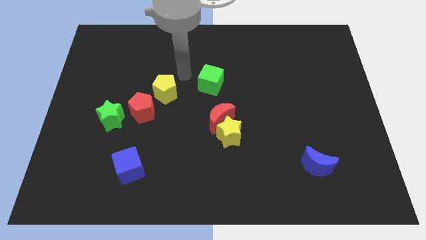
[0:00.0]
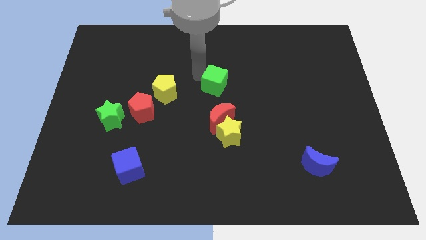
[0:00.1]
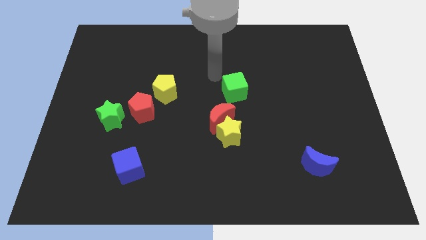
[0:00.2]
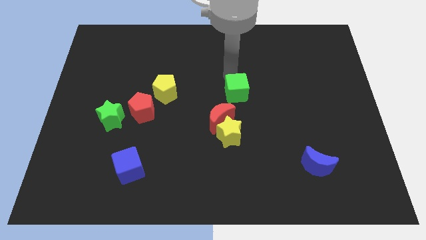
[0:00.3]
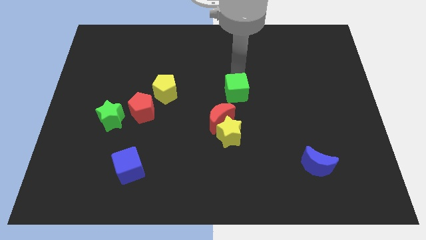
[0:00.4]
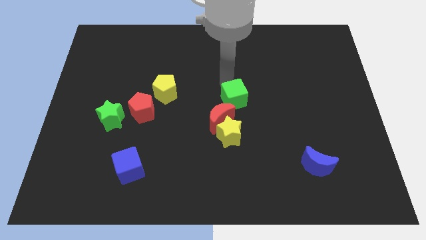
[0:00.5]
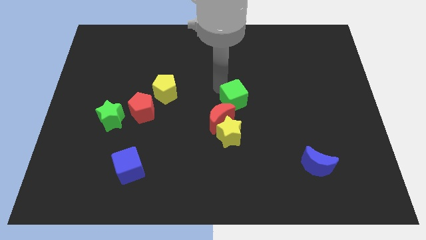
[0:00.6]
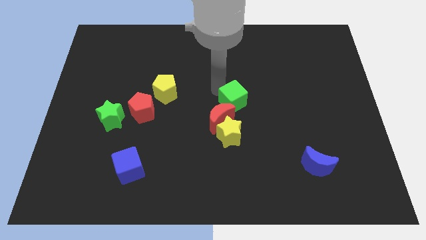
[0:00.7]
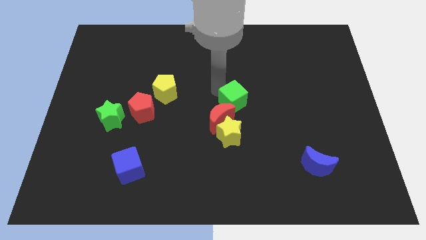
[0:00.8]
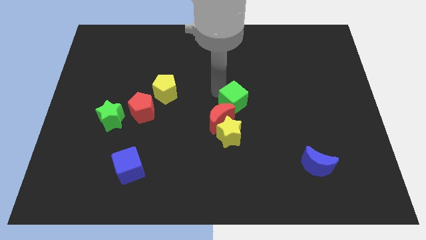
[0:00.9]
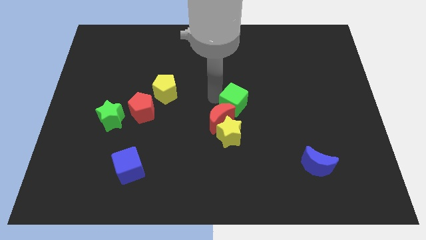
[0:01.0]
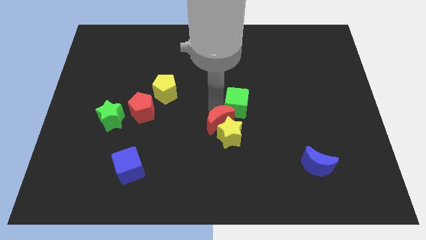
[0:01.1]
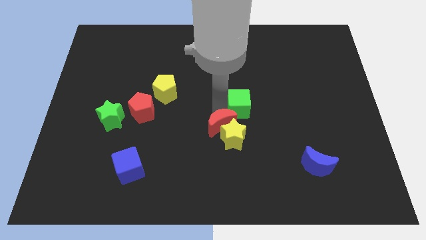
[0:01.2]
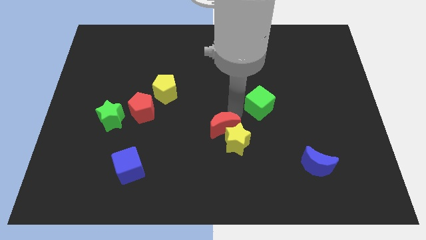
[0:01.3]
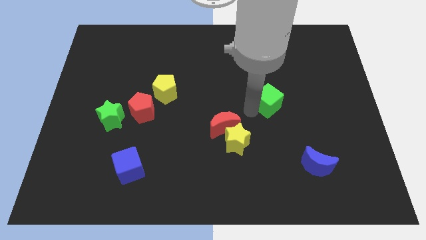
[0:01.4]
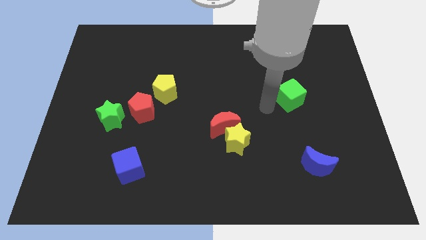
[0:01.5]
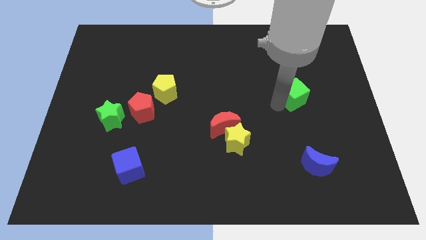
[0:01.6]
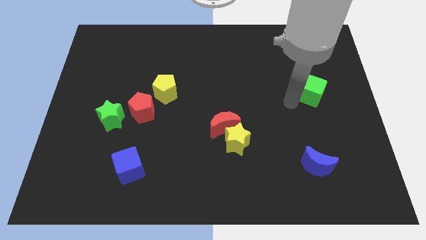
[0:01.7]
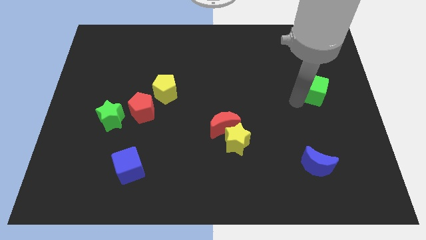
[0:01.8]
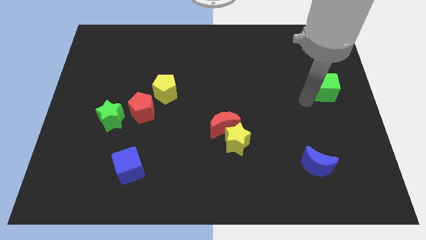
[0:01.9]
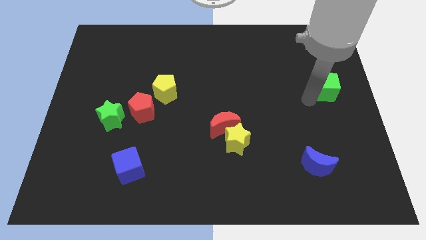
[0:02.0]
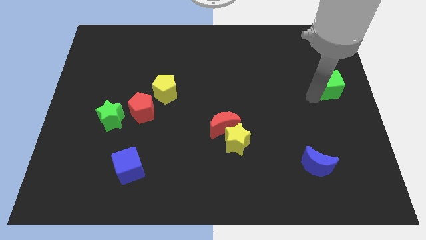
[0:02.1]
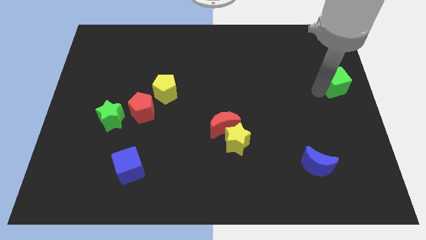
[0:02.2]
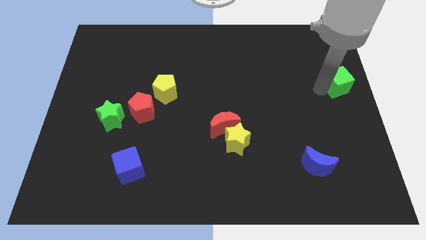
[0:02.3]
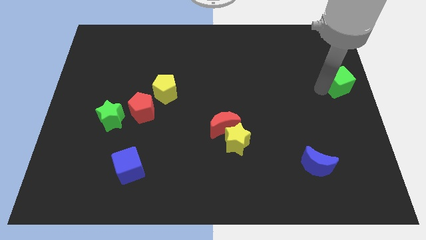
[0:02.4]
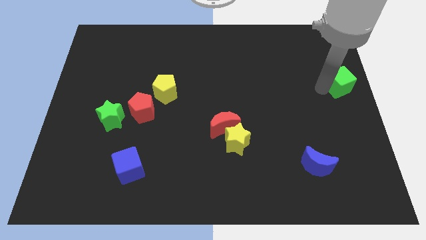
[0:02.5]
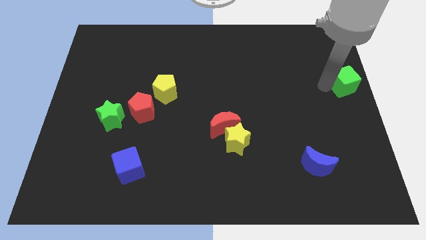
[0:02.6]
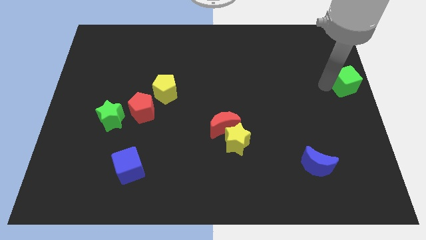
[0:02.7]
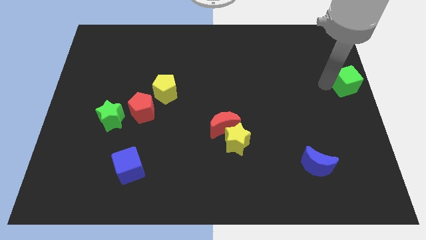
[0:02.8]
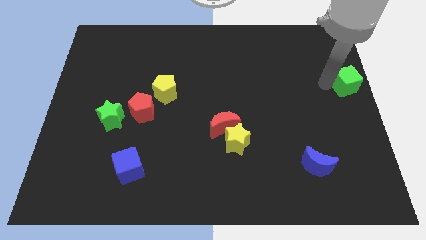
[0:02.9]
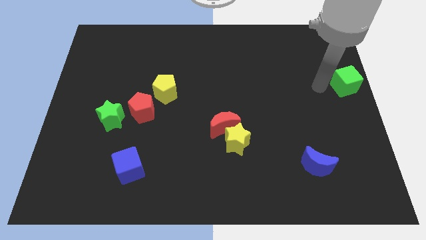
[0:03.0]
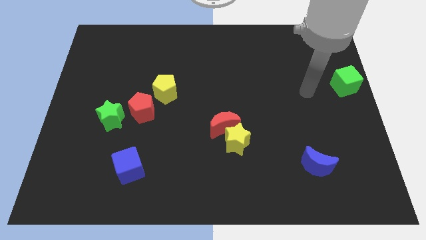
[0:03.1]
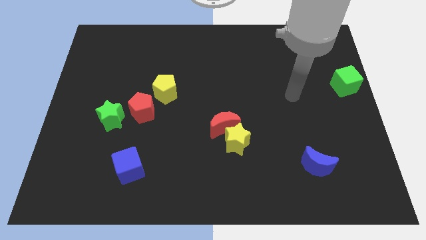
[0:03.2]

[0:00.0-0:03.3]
push the green cube near to the center right

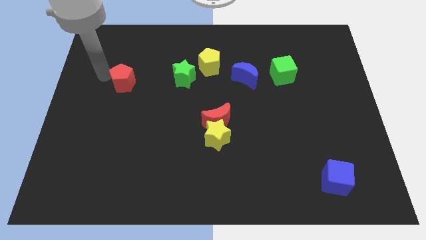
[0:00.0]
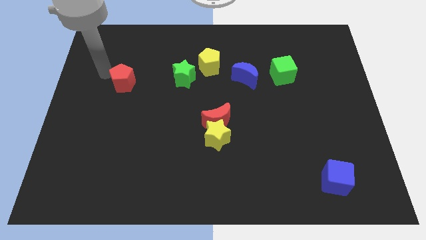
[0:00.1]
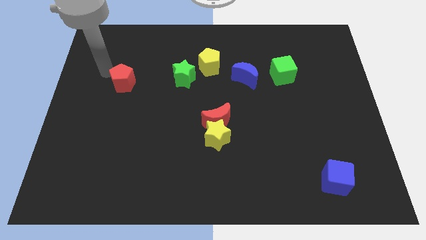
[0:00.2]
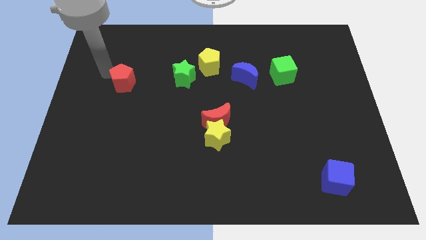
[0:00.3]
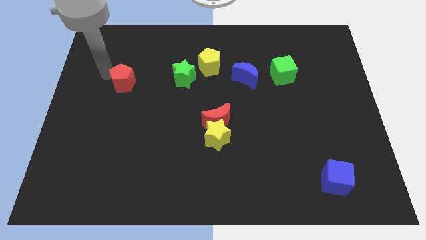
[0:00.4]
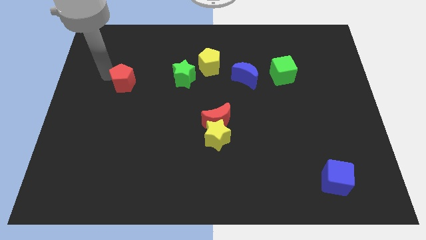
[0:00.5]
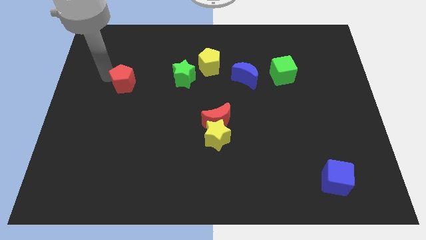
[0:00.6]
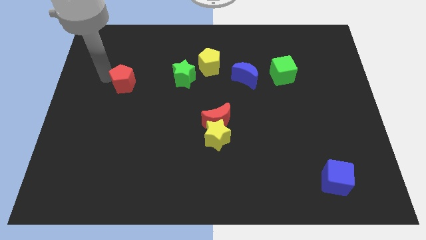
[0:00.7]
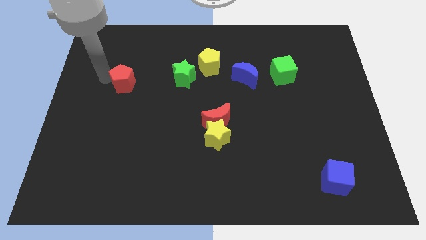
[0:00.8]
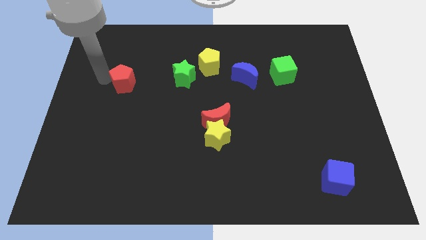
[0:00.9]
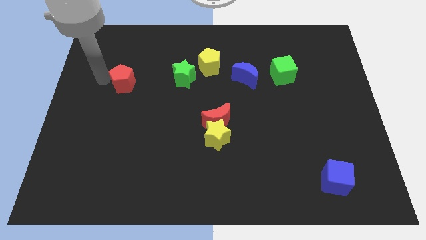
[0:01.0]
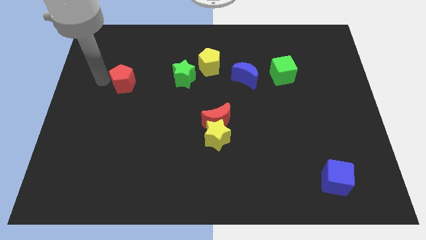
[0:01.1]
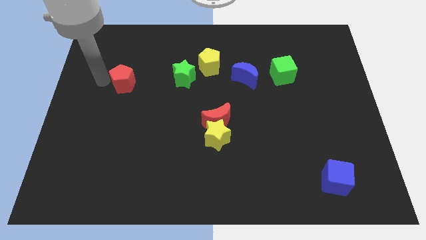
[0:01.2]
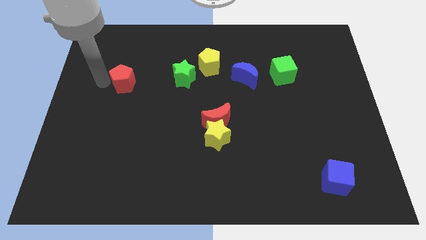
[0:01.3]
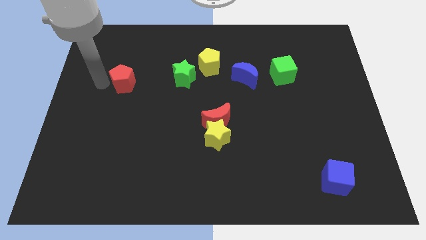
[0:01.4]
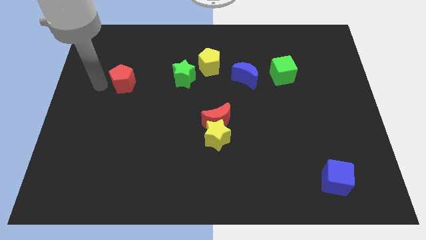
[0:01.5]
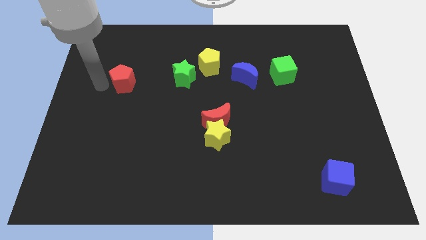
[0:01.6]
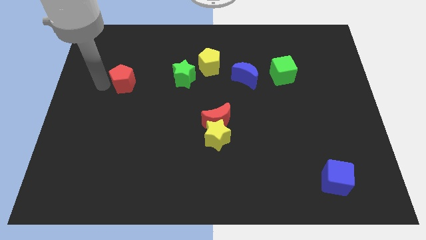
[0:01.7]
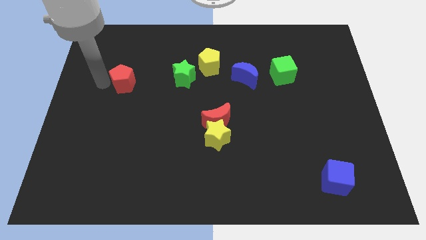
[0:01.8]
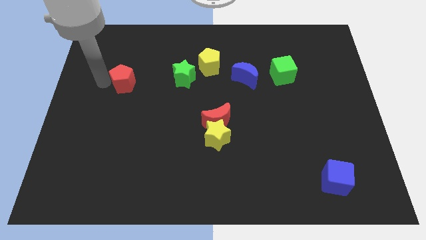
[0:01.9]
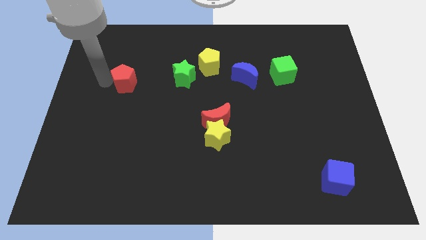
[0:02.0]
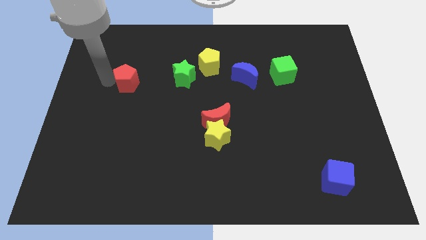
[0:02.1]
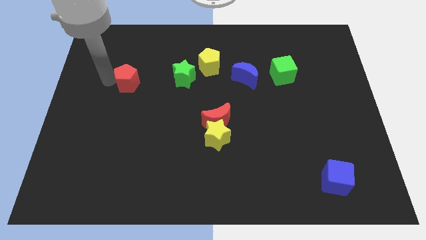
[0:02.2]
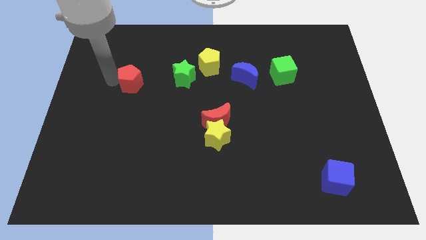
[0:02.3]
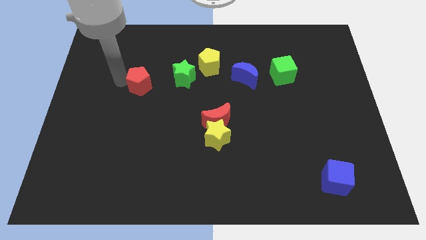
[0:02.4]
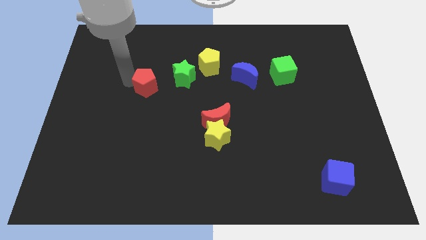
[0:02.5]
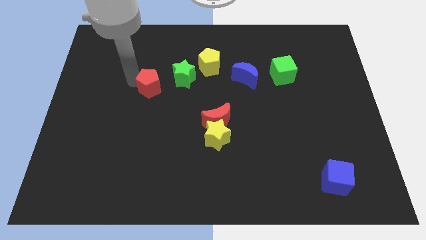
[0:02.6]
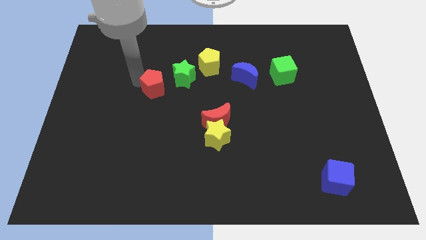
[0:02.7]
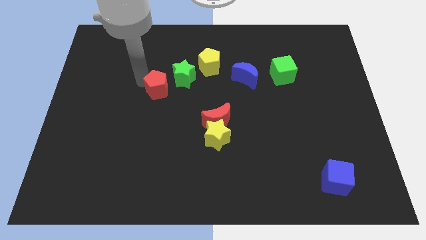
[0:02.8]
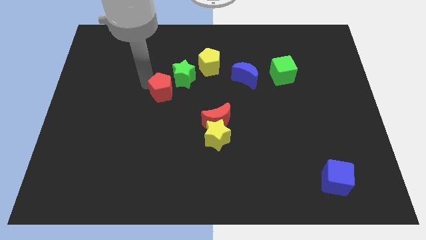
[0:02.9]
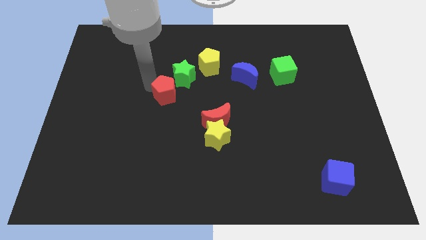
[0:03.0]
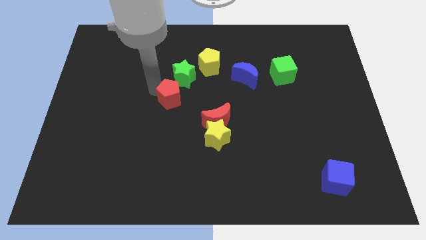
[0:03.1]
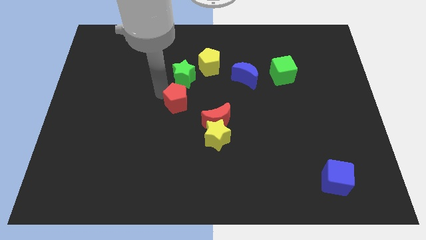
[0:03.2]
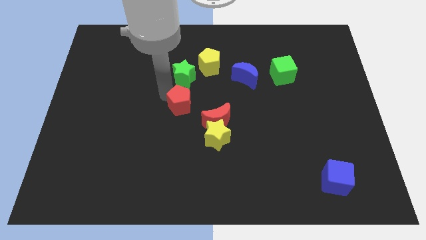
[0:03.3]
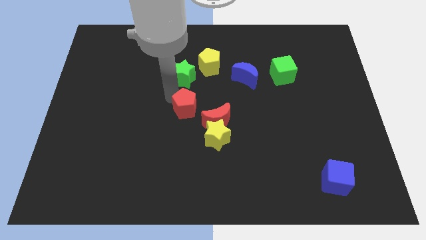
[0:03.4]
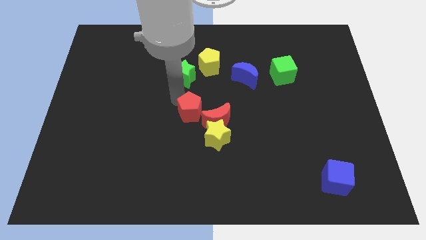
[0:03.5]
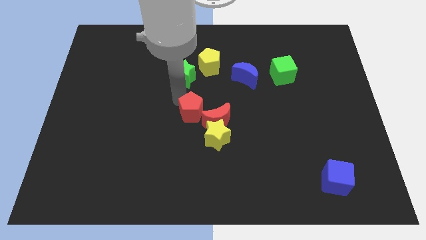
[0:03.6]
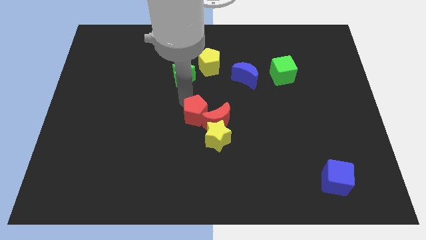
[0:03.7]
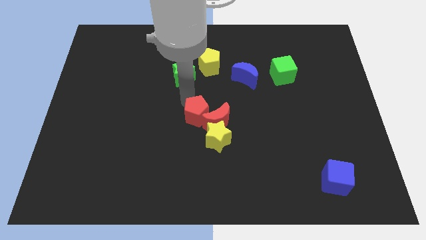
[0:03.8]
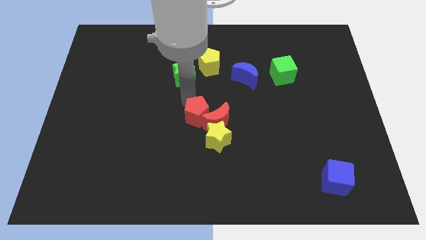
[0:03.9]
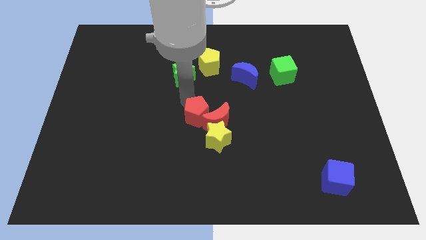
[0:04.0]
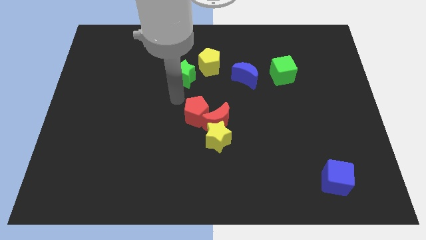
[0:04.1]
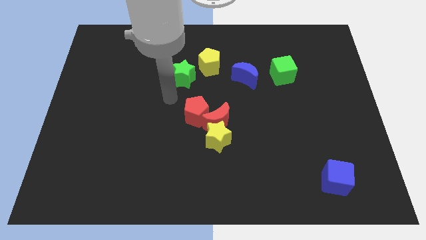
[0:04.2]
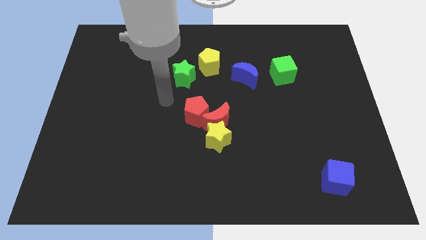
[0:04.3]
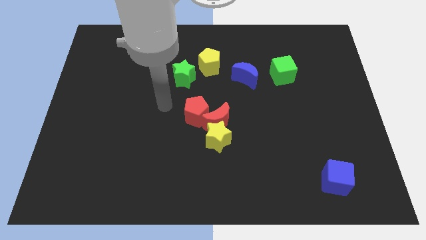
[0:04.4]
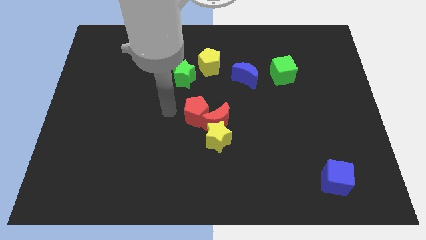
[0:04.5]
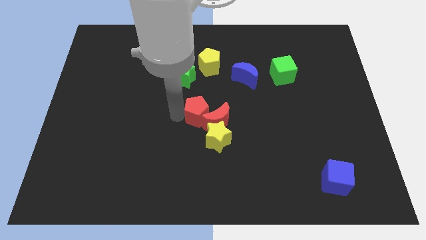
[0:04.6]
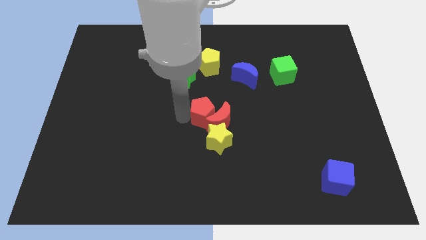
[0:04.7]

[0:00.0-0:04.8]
push the red pentagon left to the red crescent

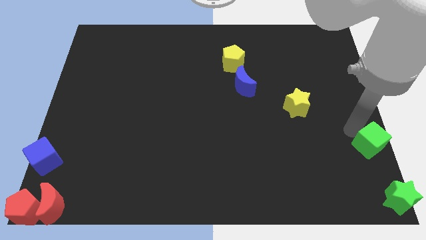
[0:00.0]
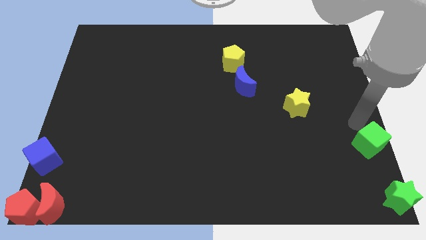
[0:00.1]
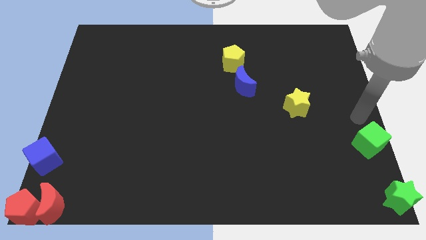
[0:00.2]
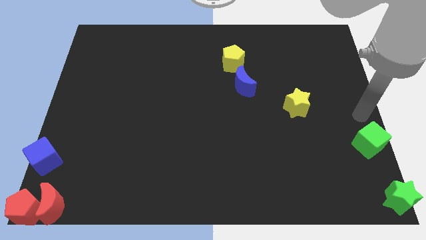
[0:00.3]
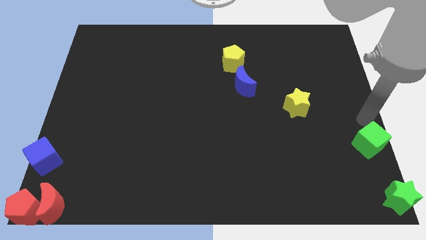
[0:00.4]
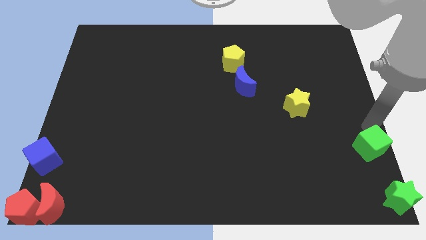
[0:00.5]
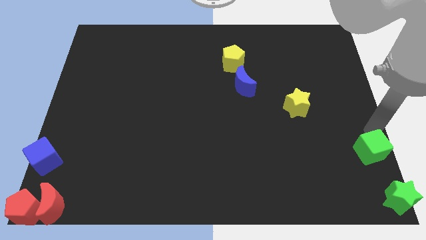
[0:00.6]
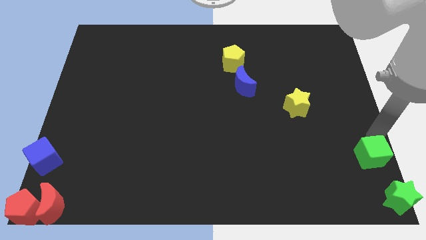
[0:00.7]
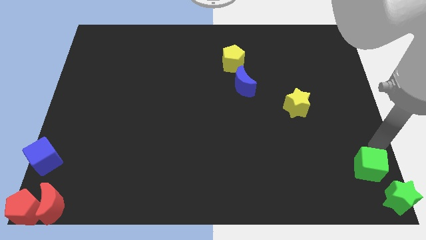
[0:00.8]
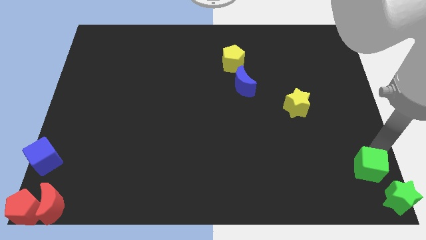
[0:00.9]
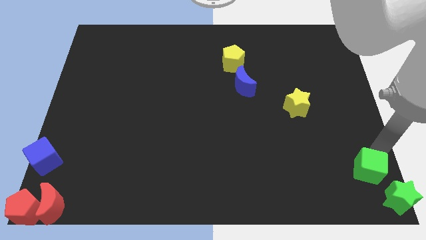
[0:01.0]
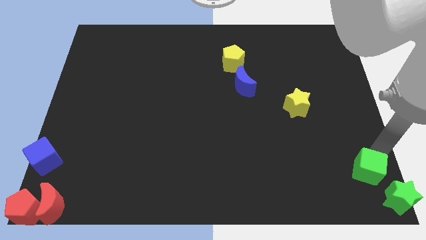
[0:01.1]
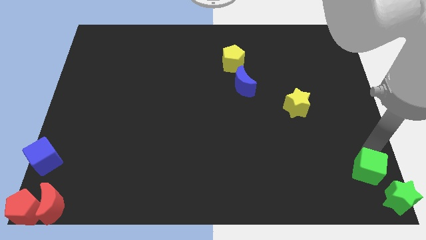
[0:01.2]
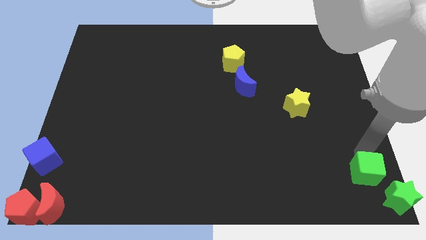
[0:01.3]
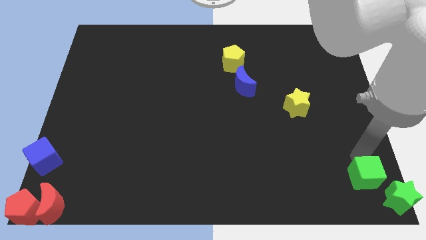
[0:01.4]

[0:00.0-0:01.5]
move the green cube towards the green star
